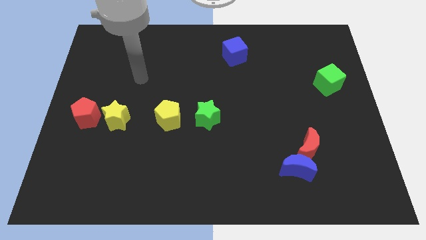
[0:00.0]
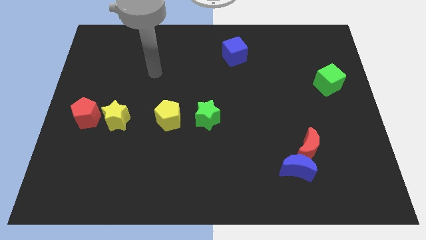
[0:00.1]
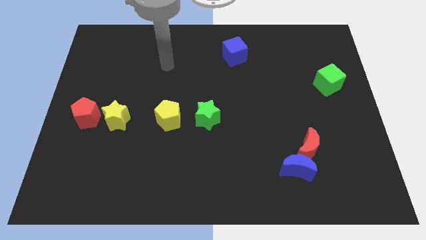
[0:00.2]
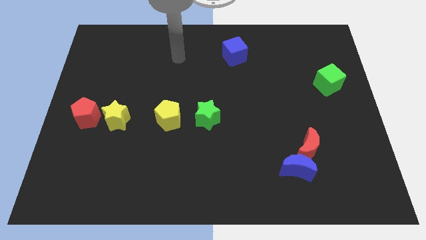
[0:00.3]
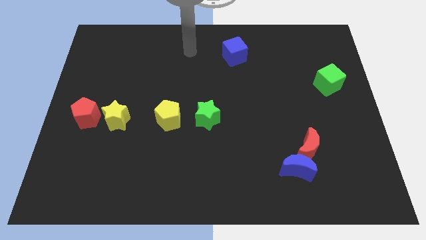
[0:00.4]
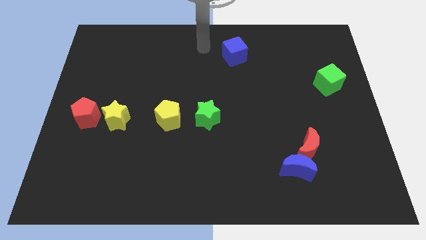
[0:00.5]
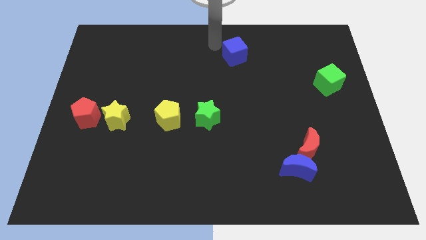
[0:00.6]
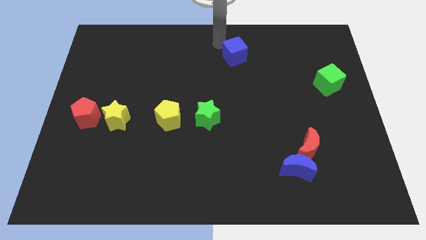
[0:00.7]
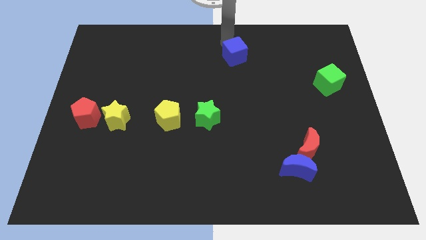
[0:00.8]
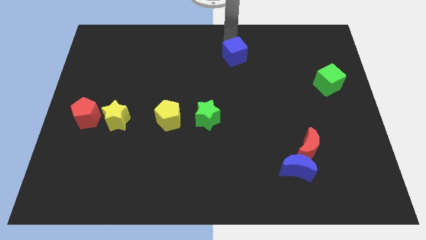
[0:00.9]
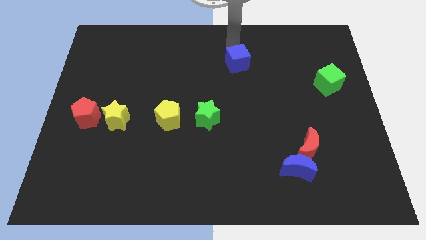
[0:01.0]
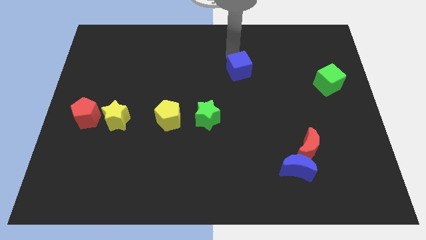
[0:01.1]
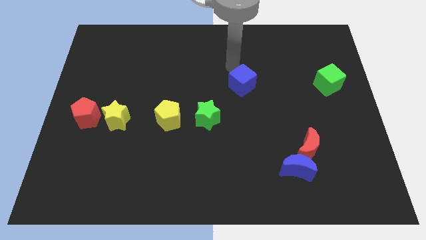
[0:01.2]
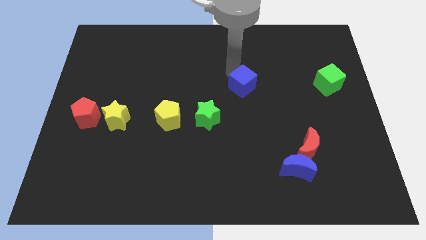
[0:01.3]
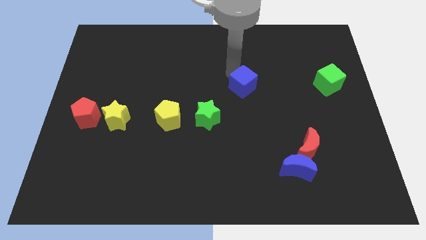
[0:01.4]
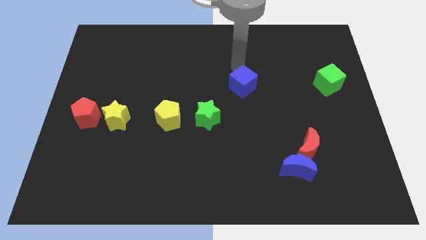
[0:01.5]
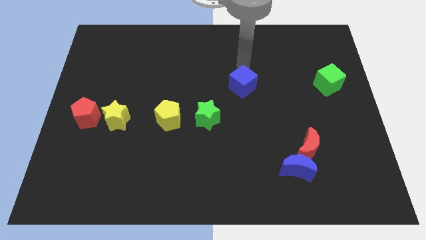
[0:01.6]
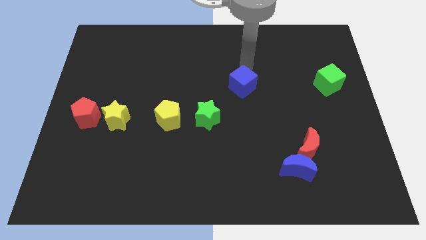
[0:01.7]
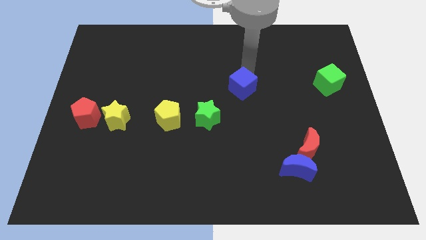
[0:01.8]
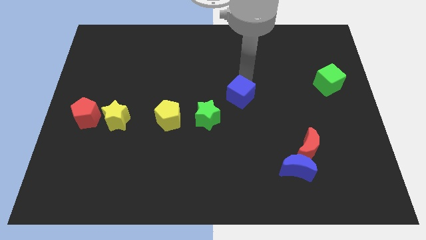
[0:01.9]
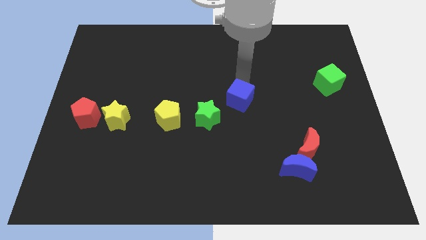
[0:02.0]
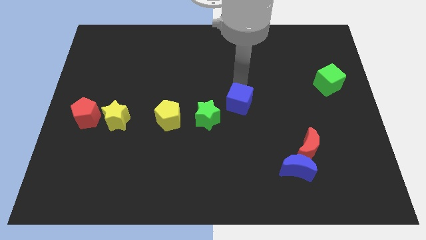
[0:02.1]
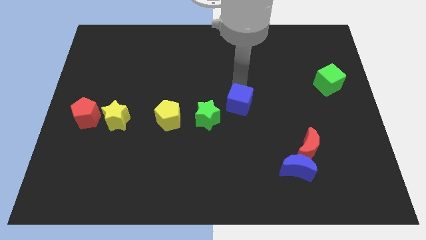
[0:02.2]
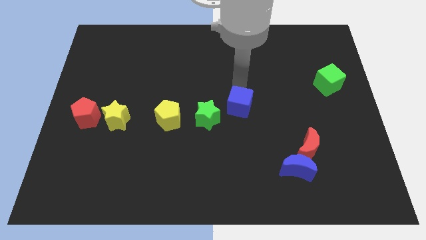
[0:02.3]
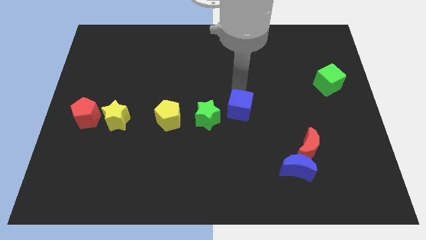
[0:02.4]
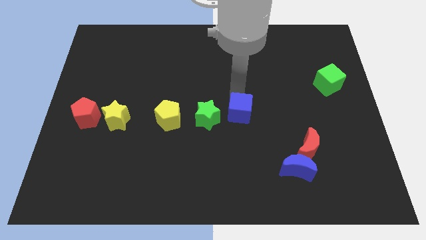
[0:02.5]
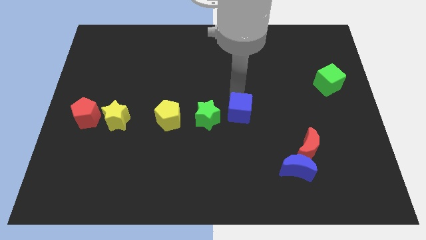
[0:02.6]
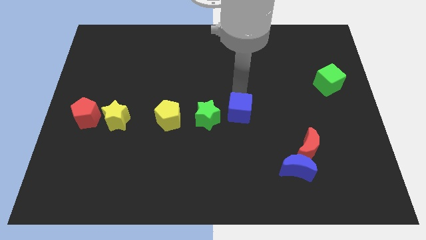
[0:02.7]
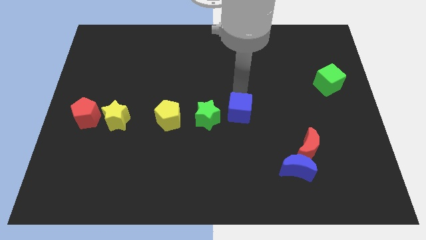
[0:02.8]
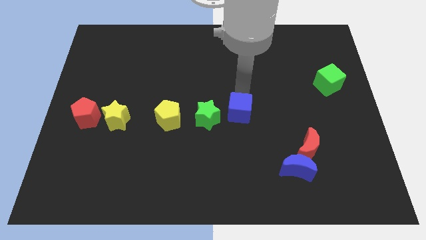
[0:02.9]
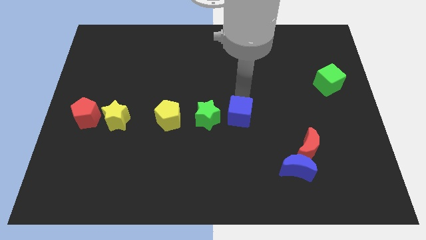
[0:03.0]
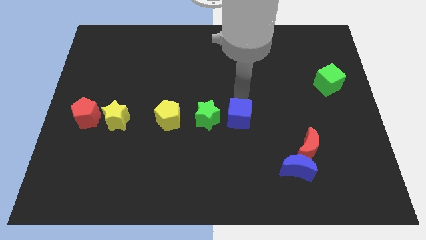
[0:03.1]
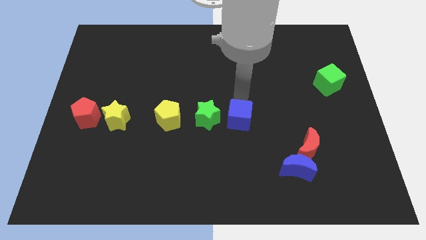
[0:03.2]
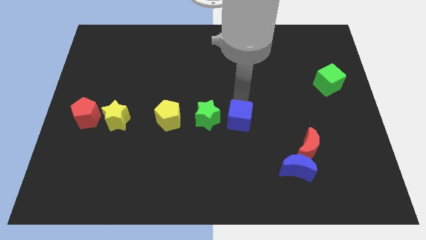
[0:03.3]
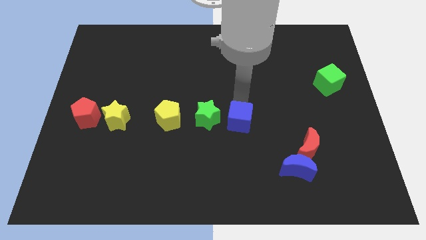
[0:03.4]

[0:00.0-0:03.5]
move blue cube at center

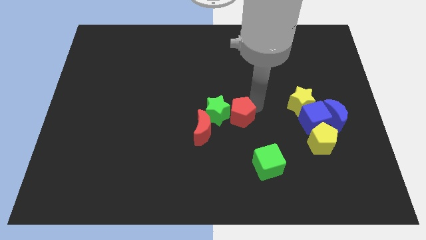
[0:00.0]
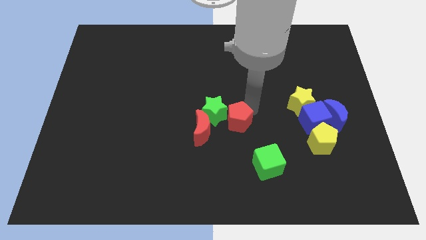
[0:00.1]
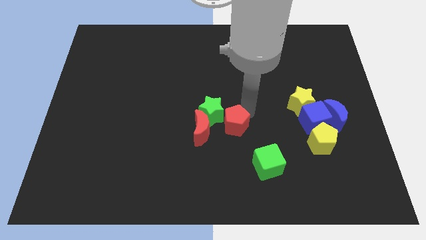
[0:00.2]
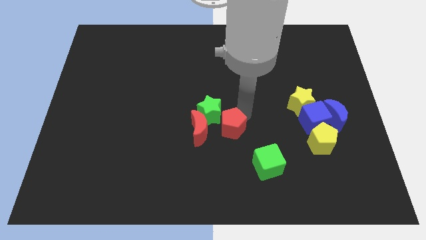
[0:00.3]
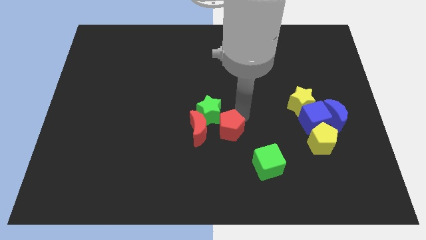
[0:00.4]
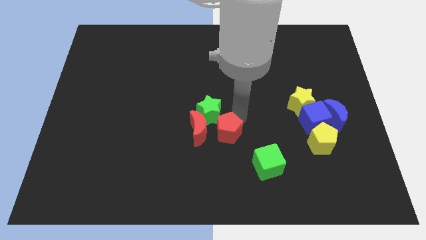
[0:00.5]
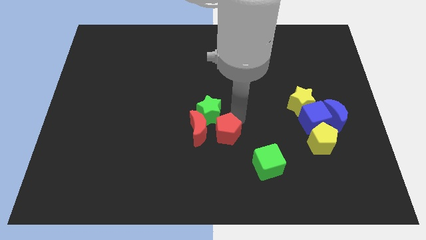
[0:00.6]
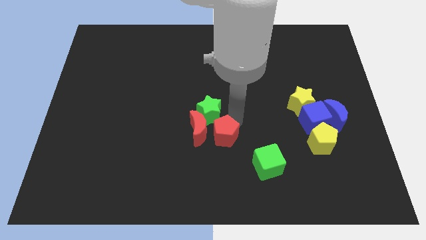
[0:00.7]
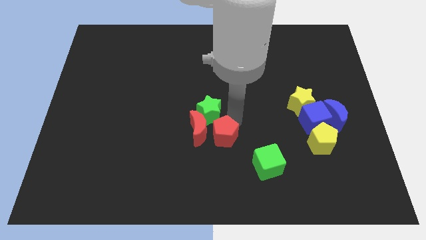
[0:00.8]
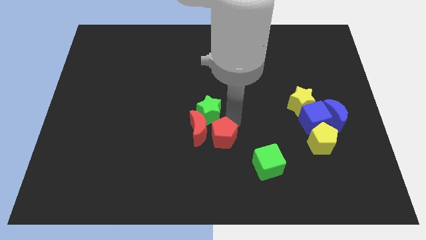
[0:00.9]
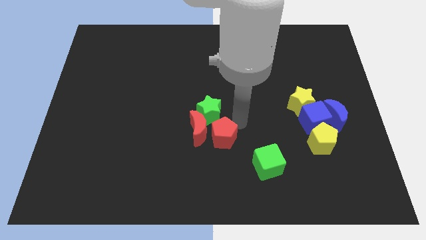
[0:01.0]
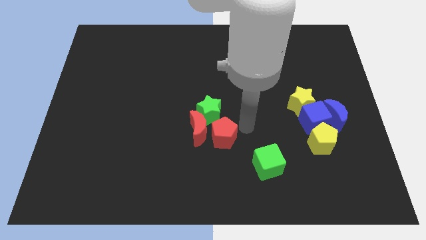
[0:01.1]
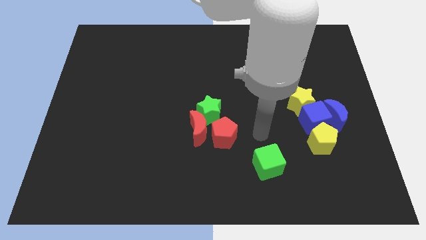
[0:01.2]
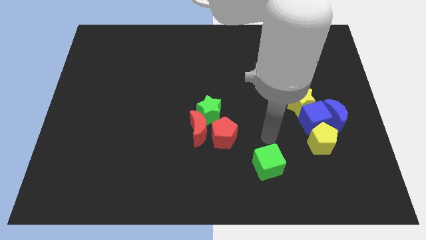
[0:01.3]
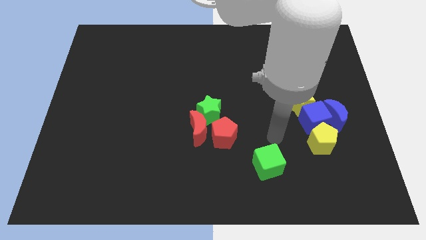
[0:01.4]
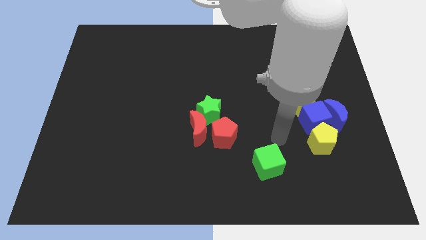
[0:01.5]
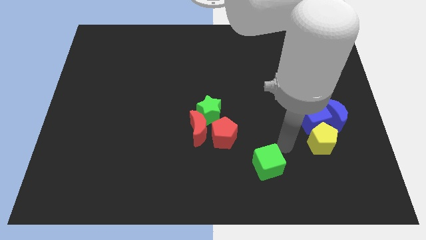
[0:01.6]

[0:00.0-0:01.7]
move the red pentagon to the right of the red crescent

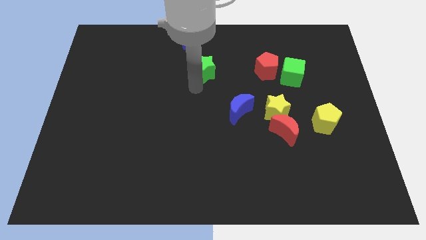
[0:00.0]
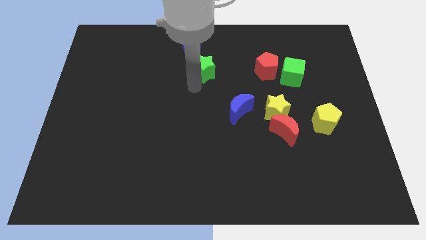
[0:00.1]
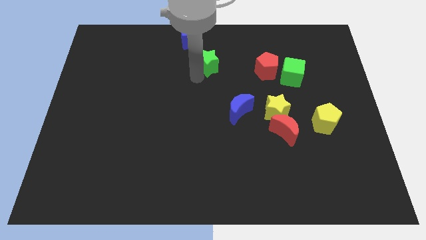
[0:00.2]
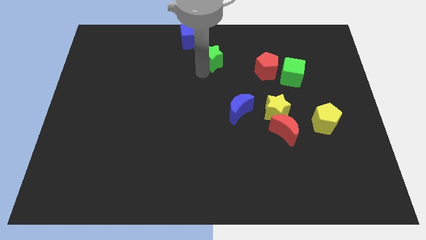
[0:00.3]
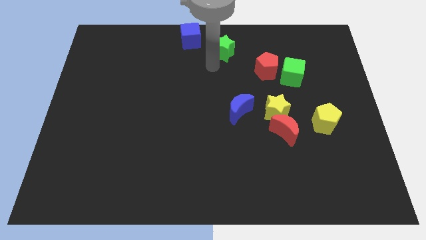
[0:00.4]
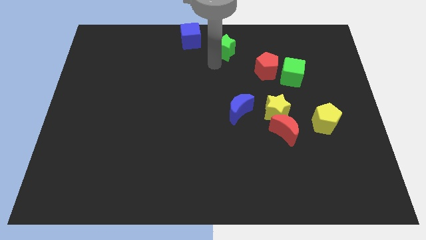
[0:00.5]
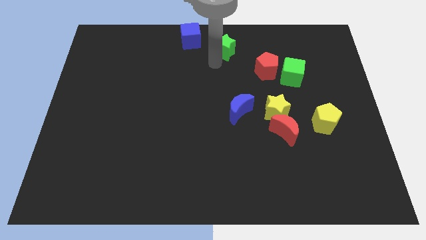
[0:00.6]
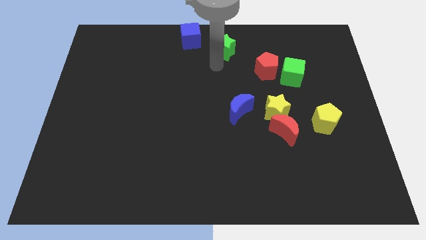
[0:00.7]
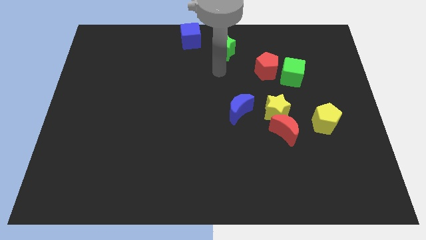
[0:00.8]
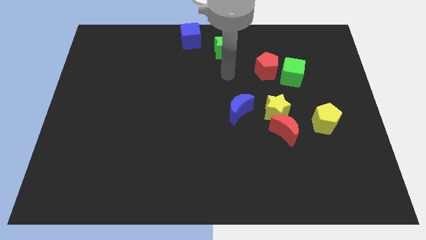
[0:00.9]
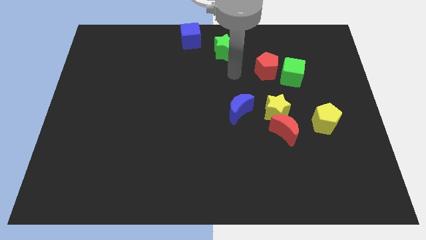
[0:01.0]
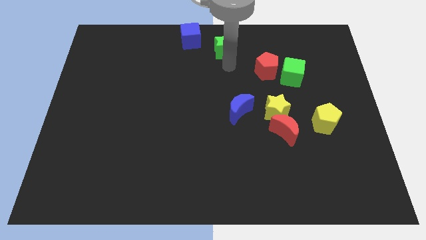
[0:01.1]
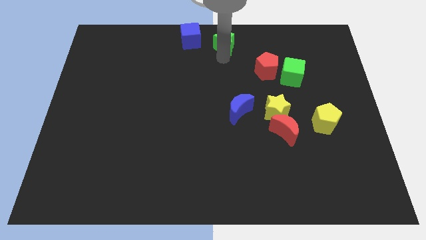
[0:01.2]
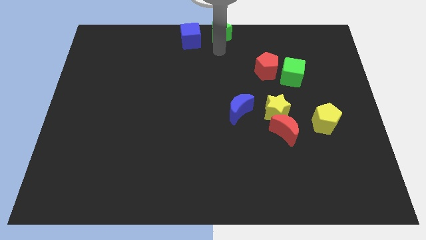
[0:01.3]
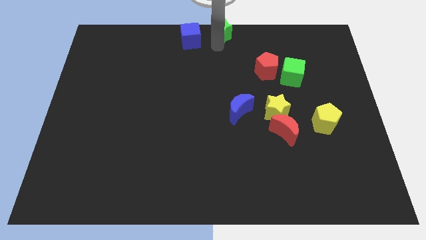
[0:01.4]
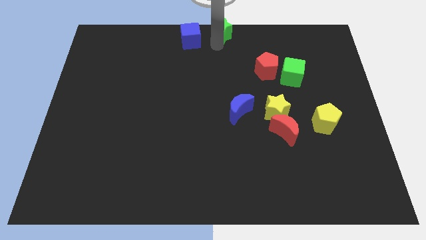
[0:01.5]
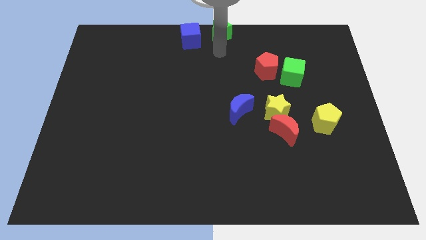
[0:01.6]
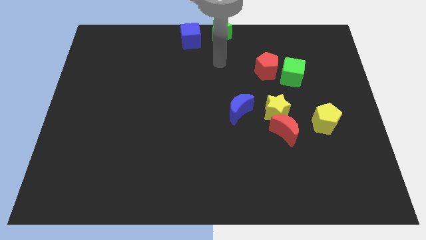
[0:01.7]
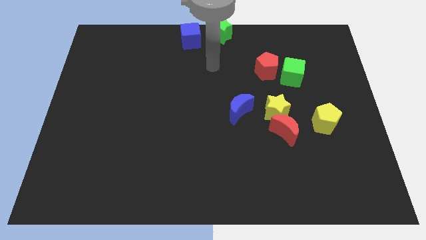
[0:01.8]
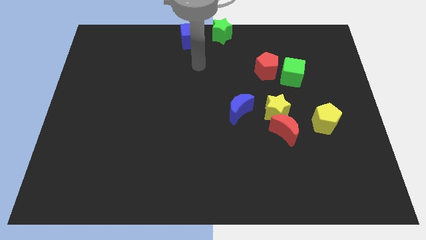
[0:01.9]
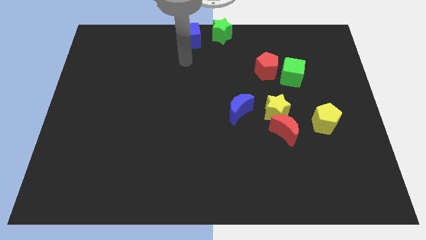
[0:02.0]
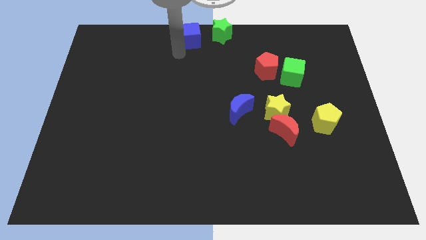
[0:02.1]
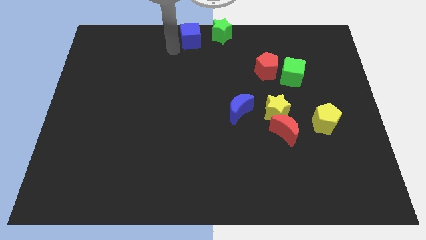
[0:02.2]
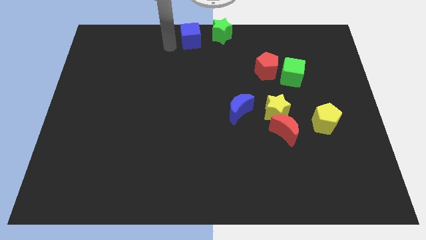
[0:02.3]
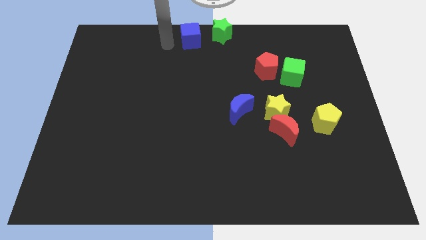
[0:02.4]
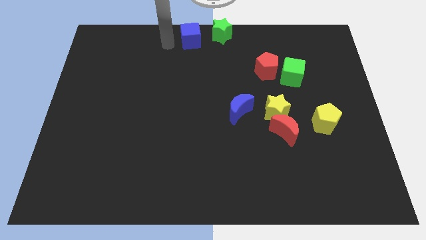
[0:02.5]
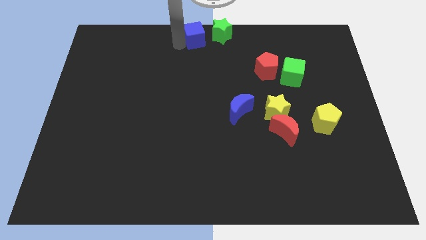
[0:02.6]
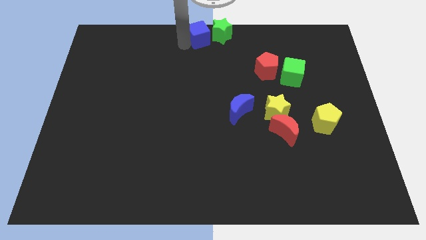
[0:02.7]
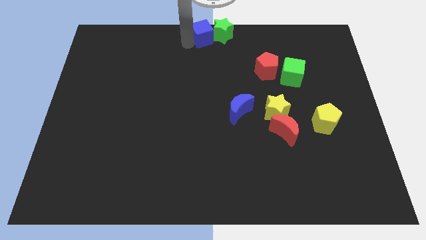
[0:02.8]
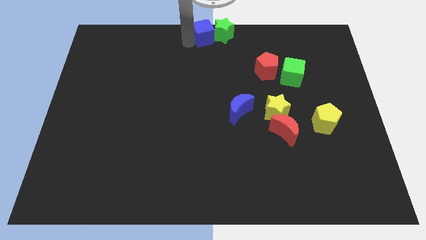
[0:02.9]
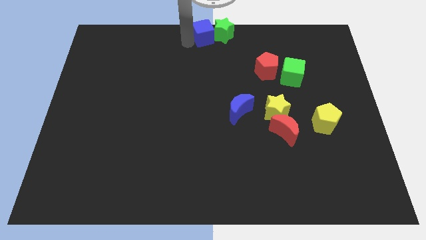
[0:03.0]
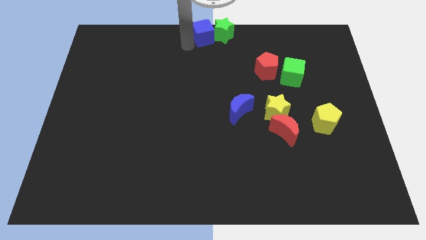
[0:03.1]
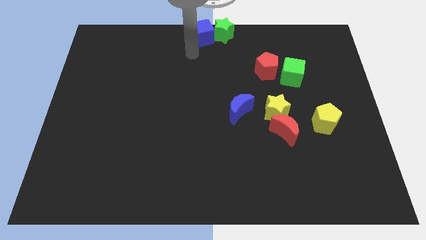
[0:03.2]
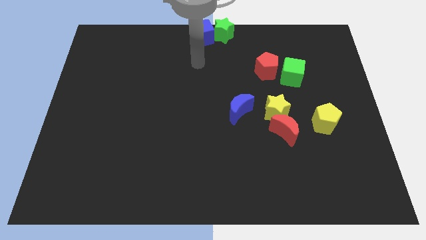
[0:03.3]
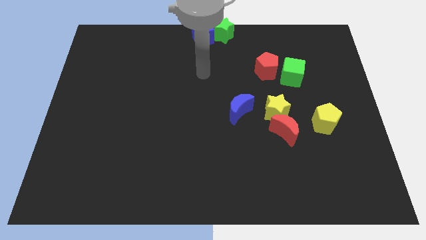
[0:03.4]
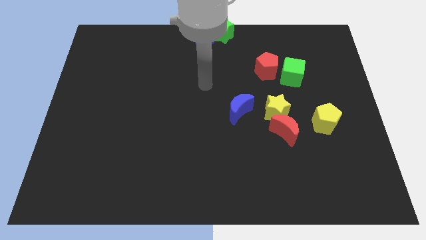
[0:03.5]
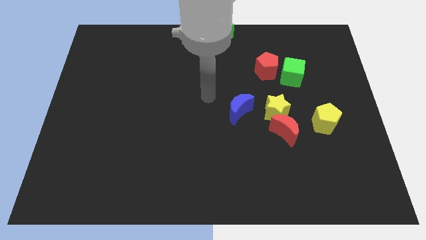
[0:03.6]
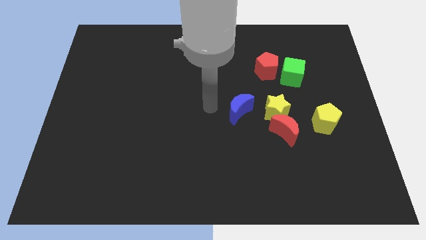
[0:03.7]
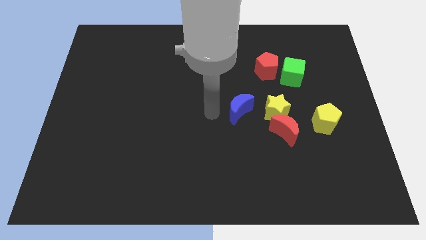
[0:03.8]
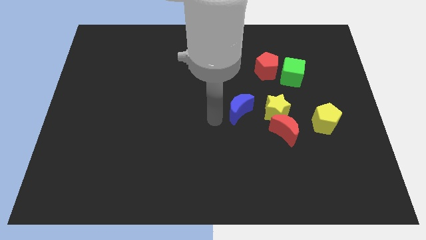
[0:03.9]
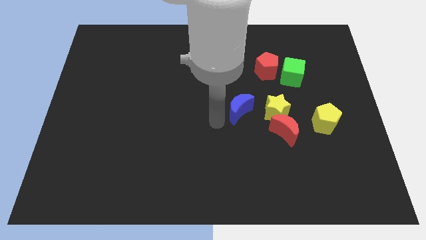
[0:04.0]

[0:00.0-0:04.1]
place the green star right to the blue cube
